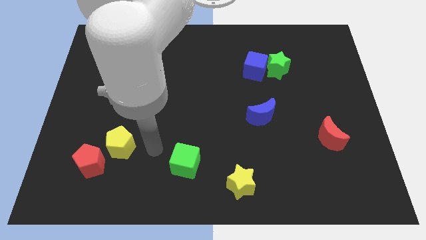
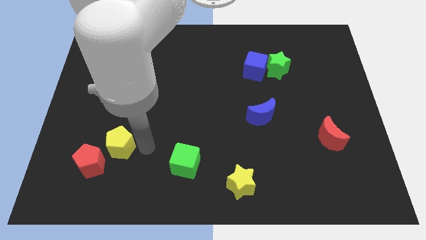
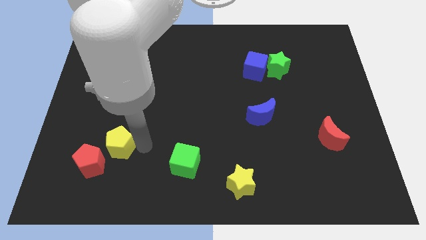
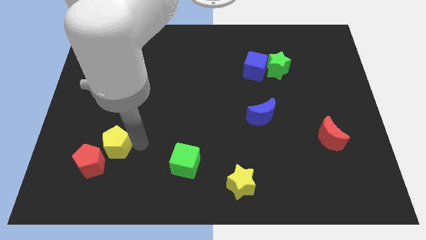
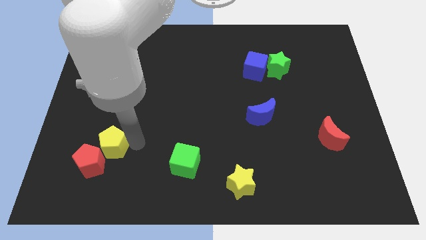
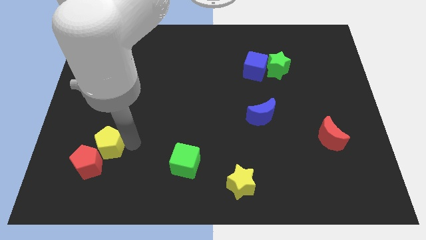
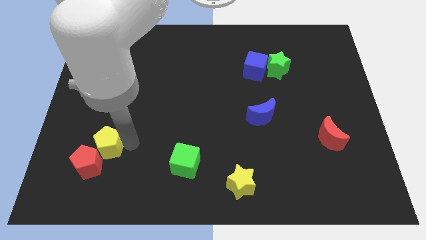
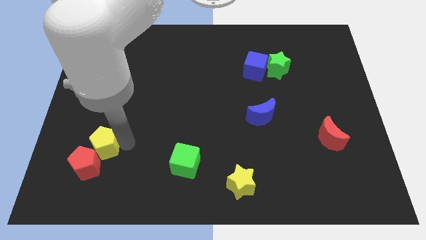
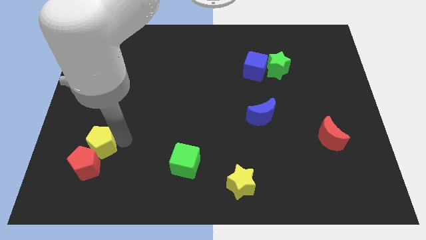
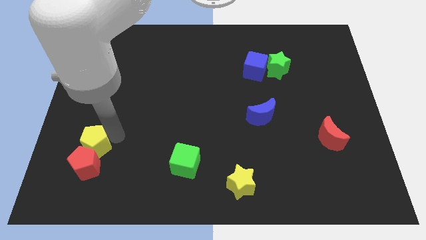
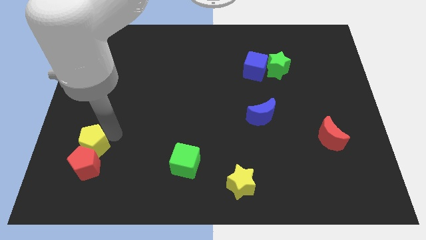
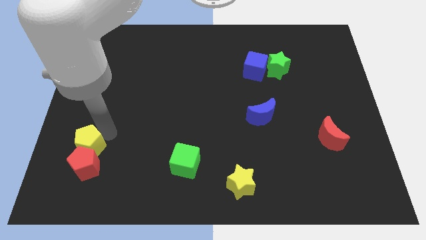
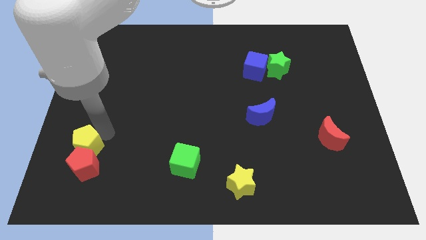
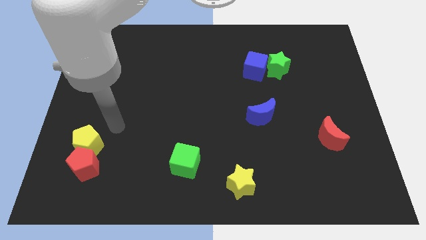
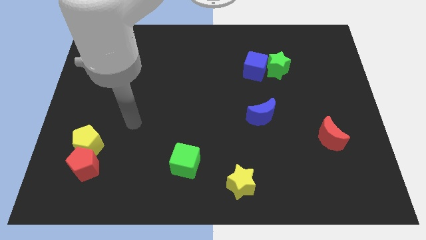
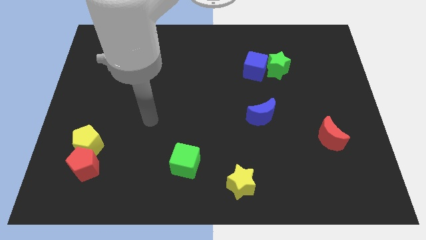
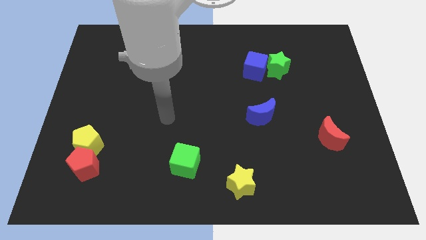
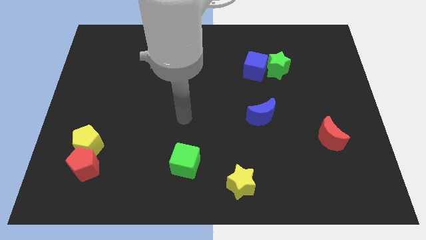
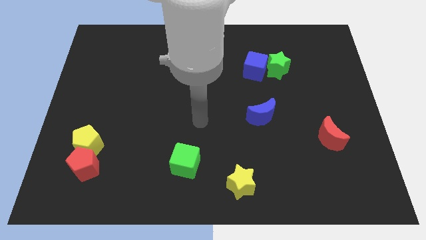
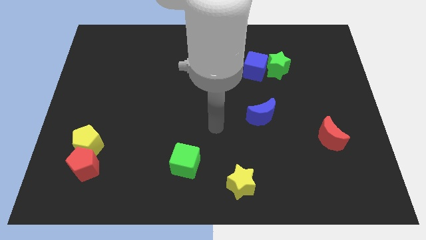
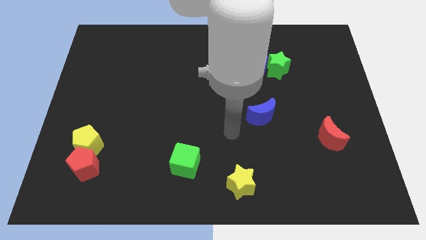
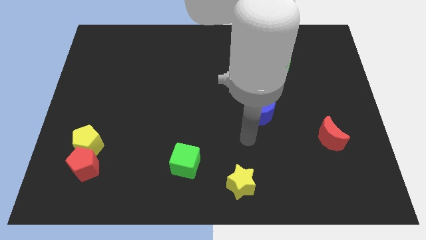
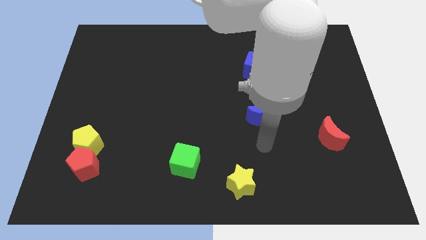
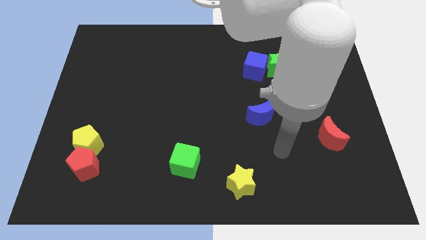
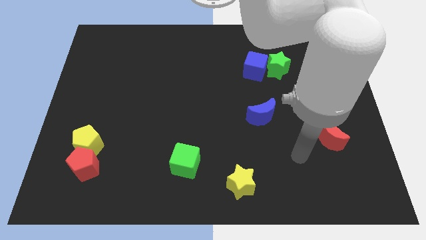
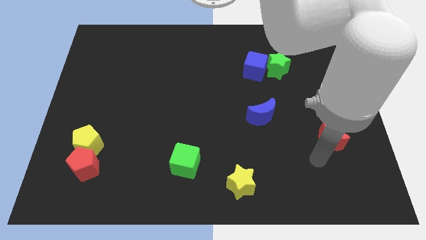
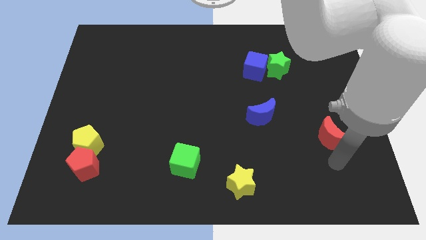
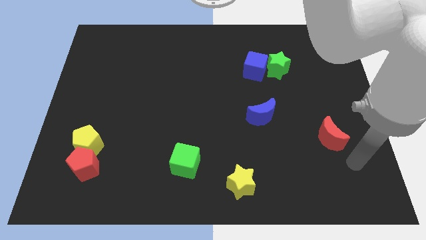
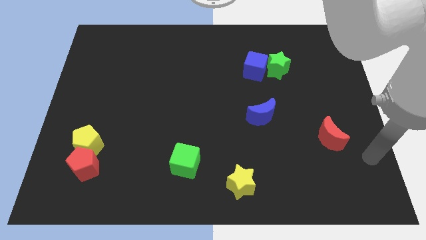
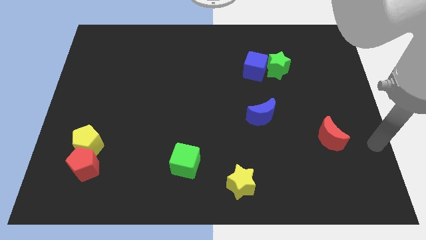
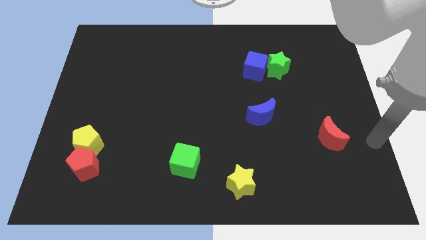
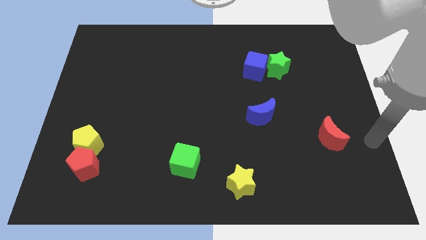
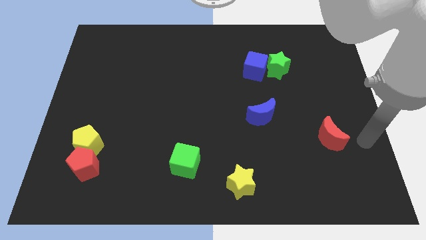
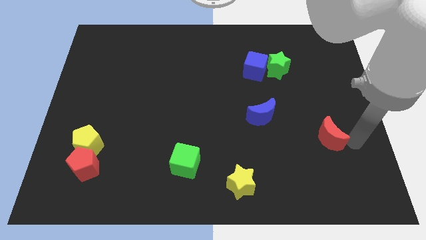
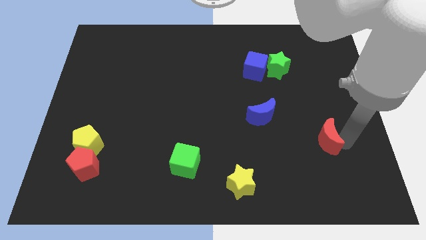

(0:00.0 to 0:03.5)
move your arm away from yellow pentagon

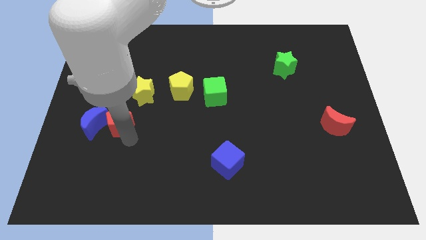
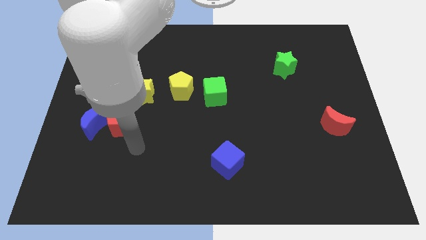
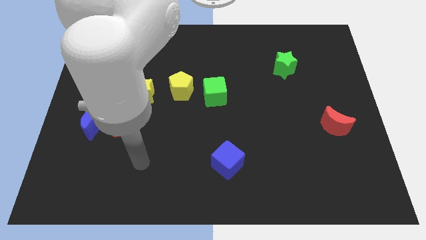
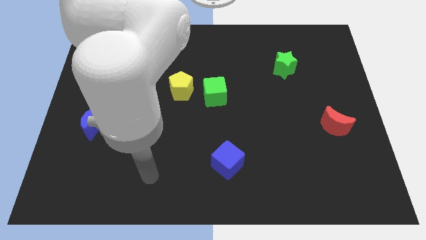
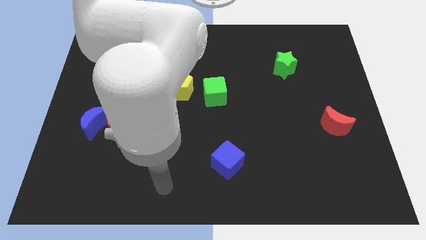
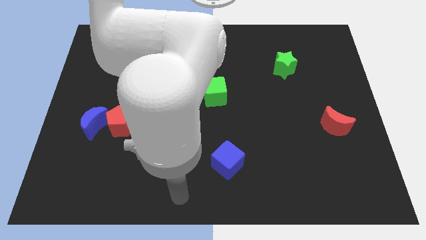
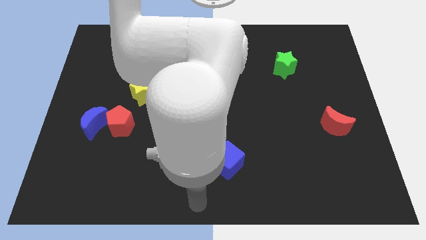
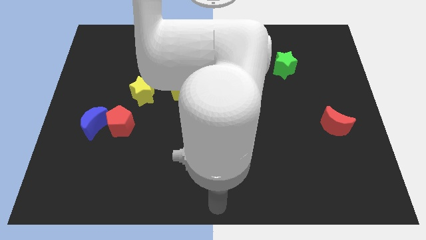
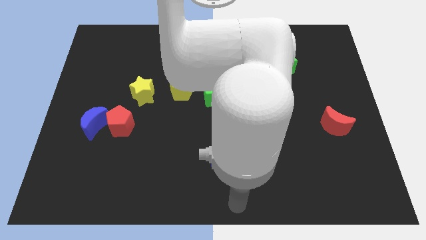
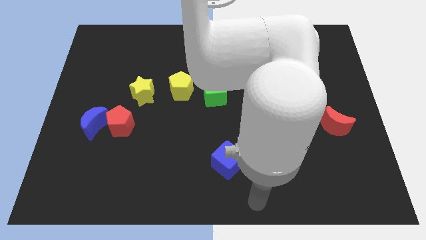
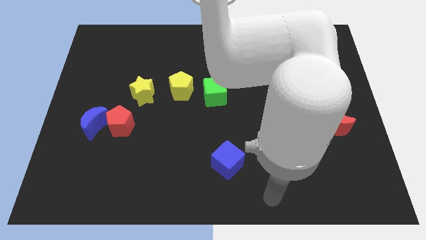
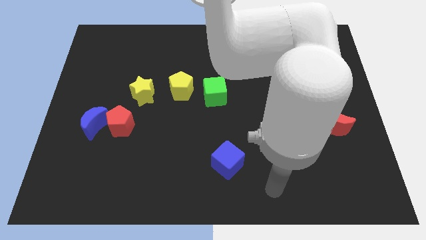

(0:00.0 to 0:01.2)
move your arm away from the red pentagon

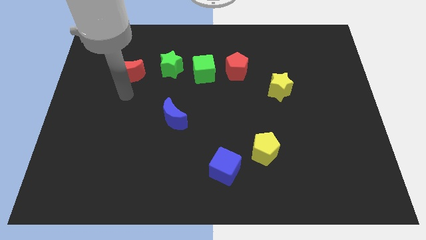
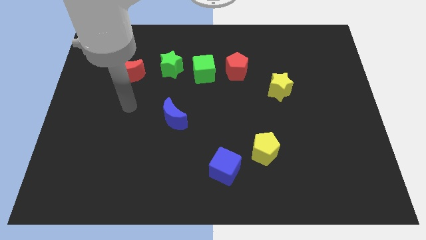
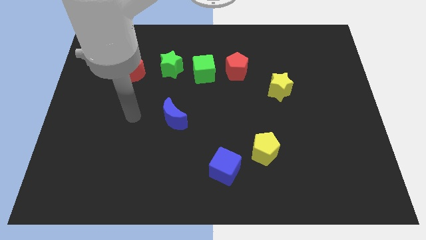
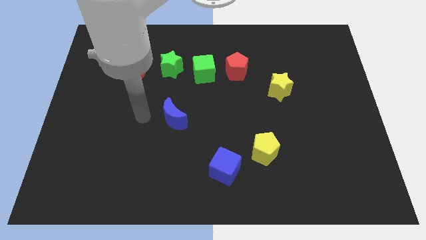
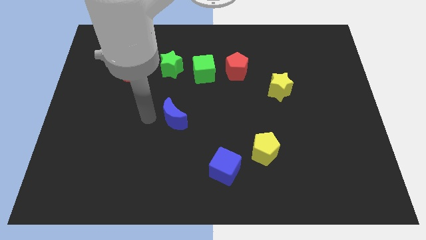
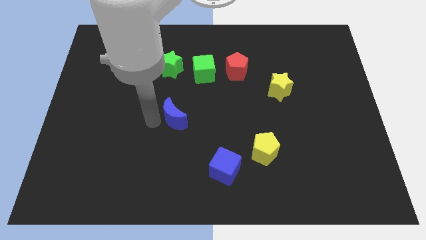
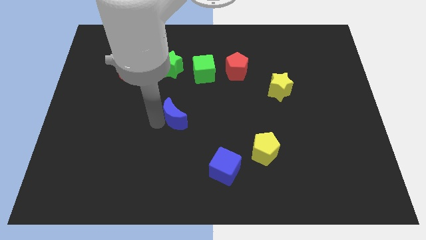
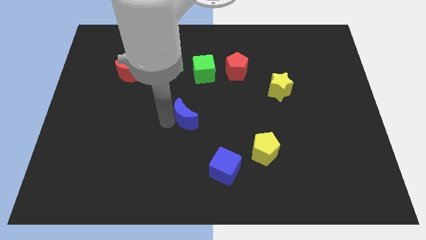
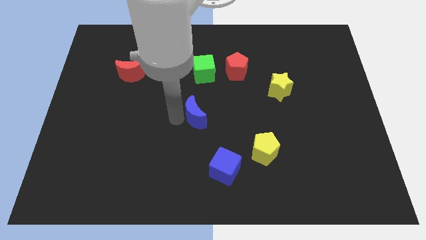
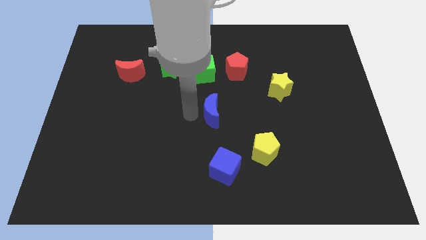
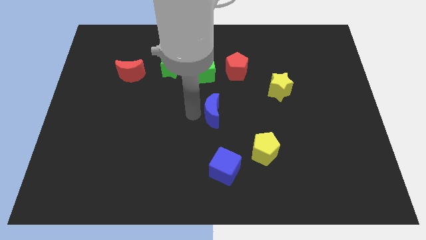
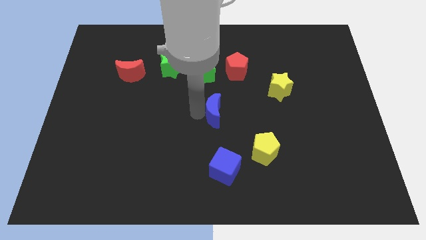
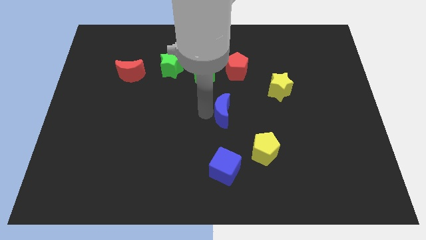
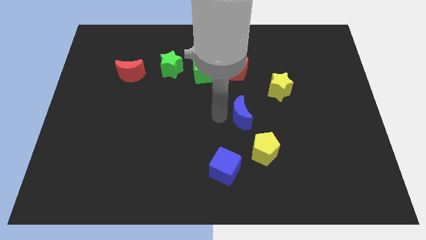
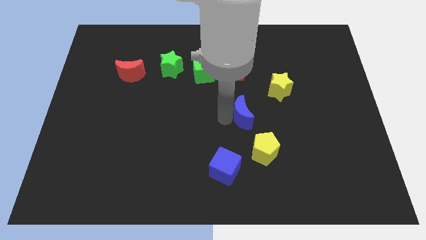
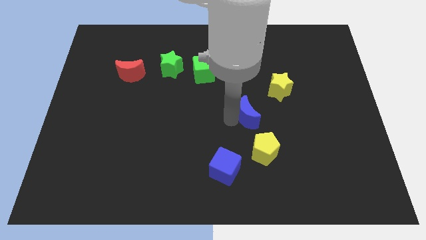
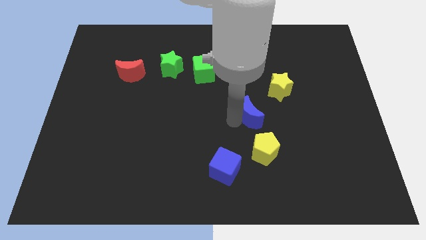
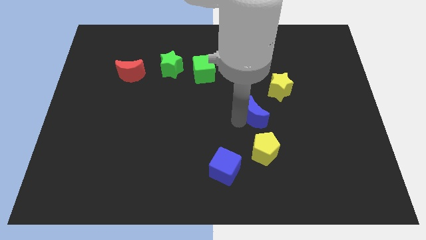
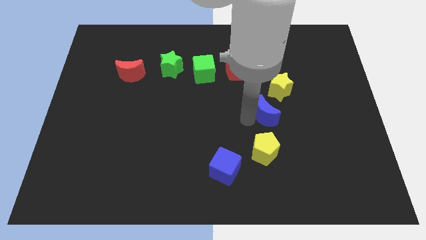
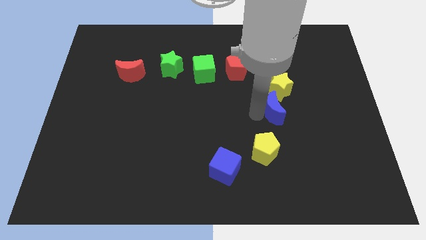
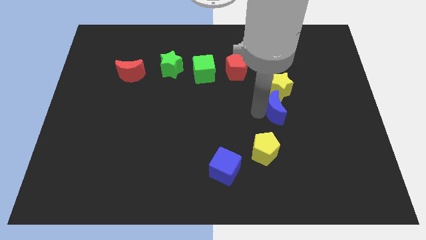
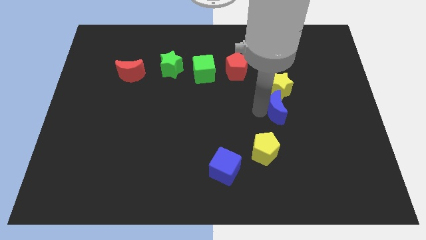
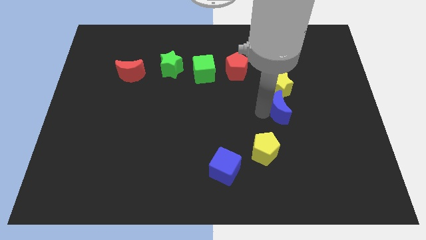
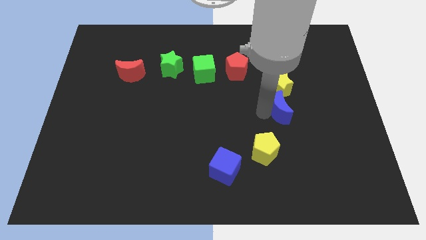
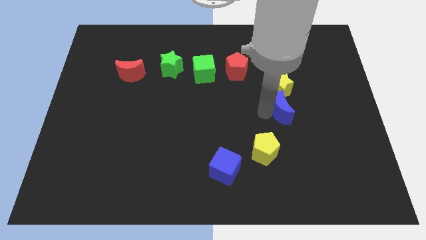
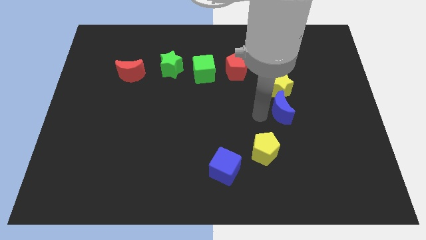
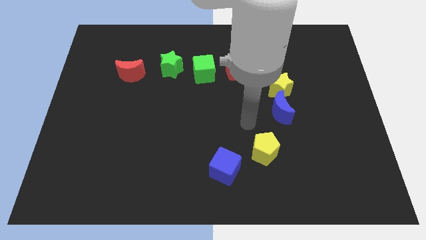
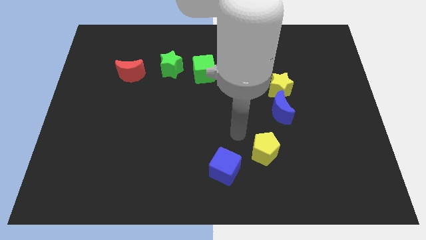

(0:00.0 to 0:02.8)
place the blue moon to the bottom of the yellow star

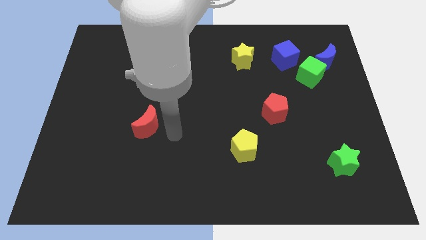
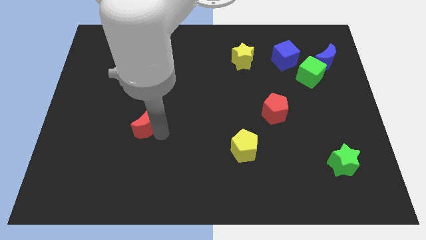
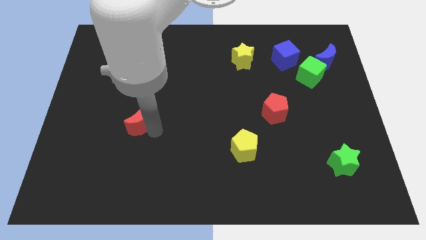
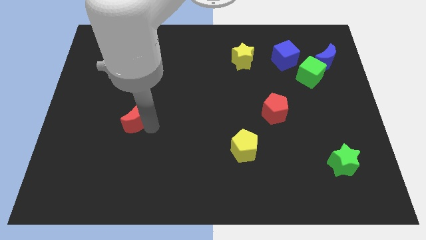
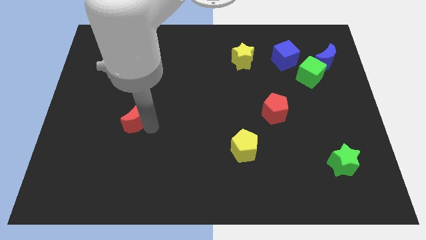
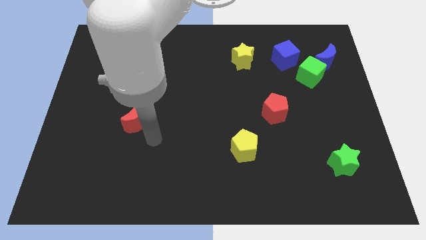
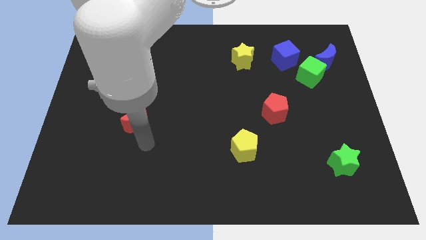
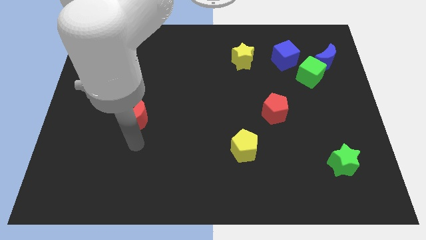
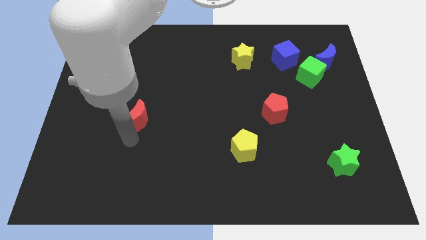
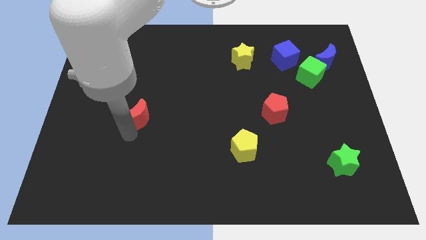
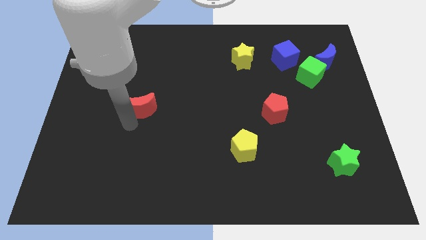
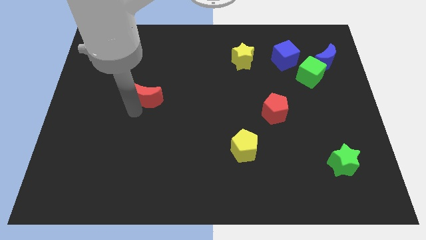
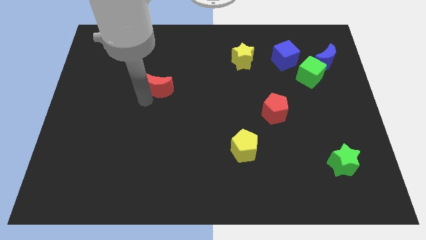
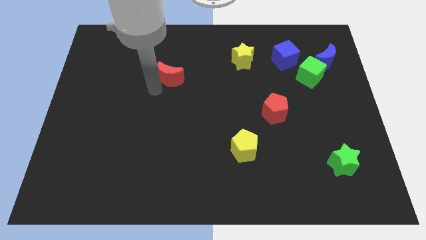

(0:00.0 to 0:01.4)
move the red moon towards the top side
